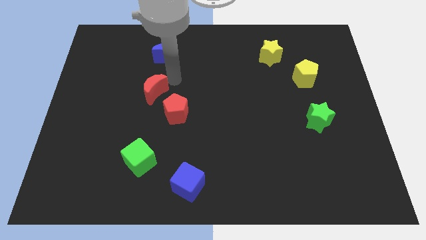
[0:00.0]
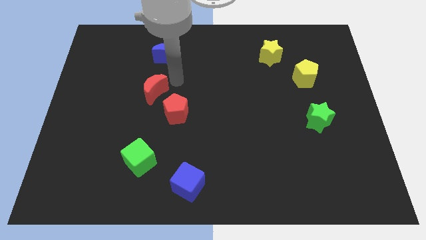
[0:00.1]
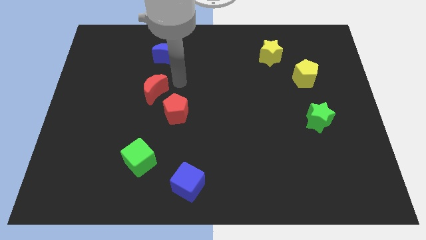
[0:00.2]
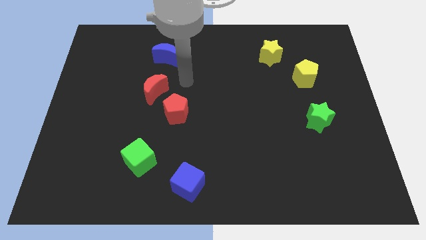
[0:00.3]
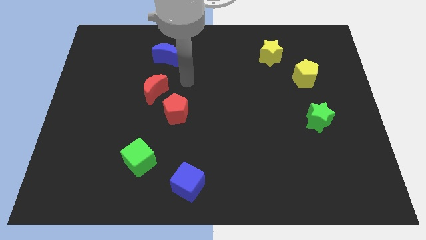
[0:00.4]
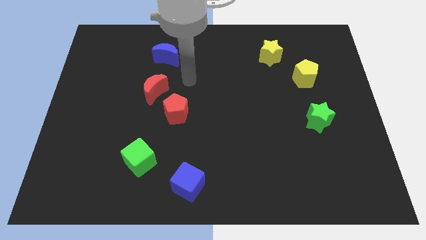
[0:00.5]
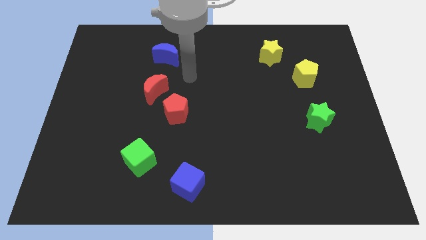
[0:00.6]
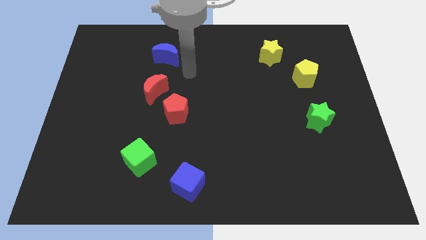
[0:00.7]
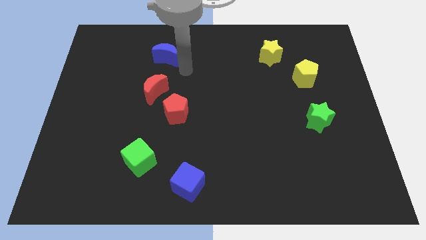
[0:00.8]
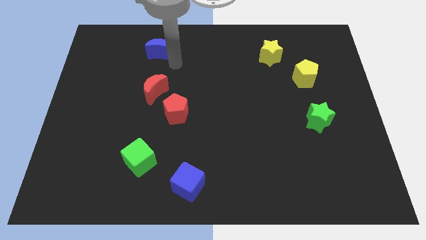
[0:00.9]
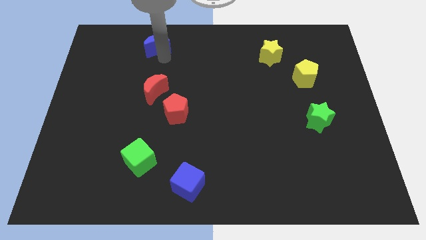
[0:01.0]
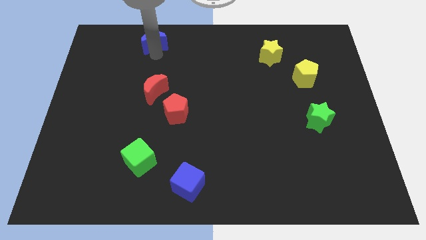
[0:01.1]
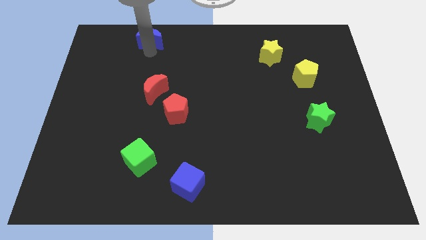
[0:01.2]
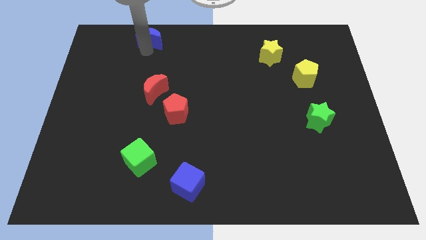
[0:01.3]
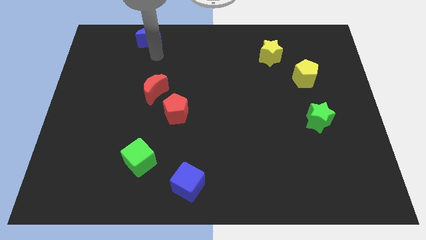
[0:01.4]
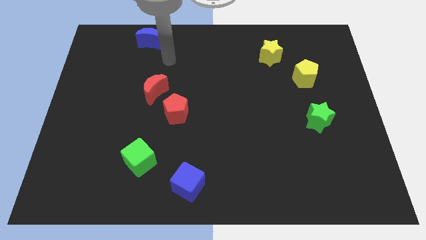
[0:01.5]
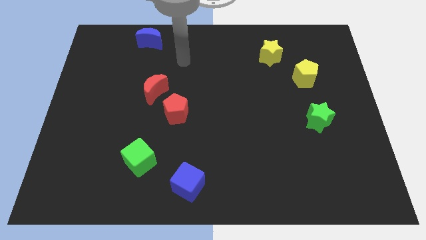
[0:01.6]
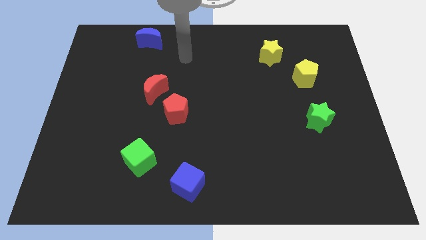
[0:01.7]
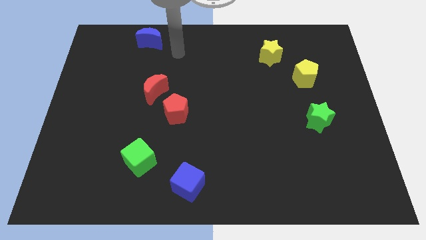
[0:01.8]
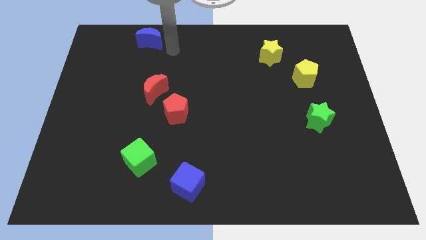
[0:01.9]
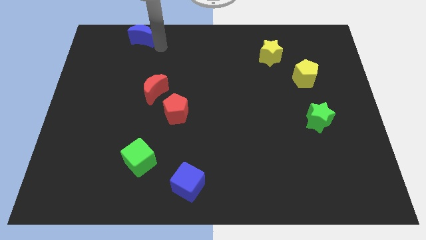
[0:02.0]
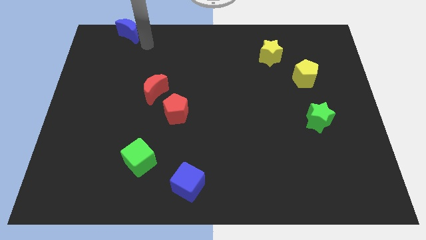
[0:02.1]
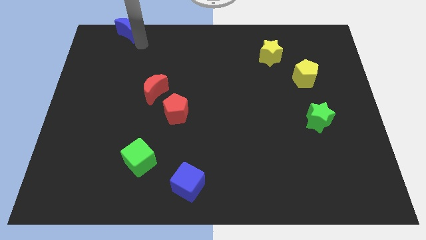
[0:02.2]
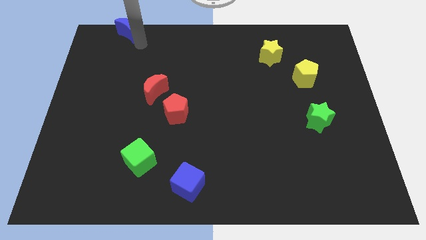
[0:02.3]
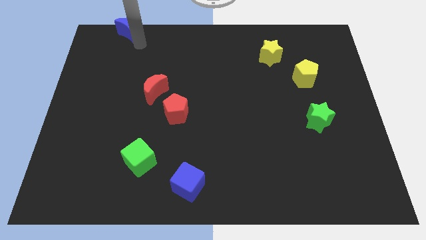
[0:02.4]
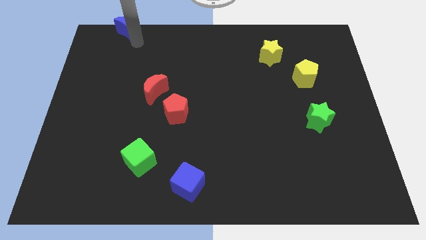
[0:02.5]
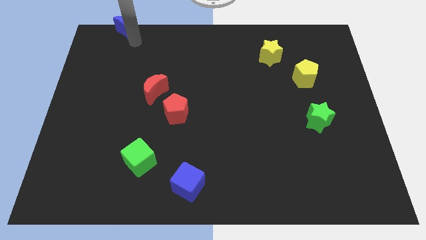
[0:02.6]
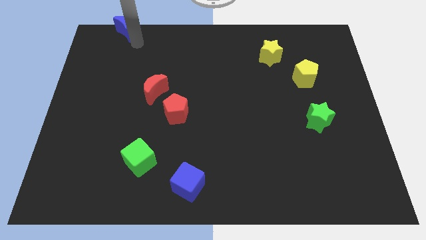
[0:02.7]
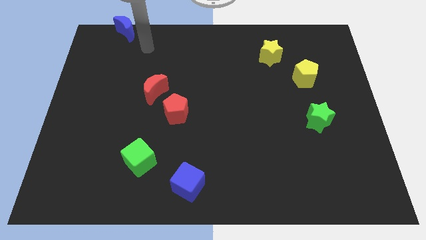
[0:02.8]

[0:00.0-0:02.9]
push blue moon to the top

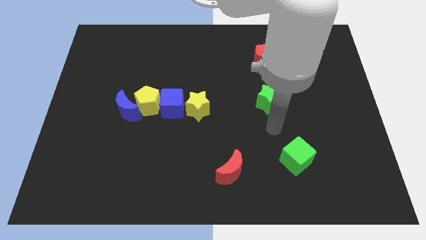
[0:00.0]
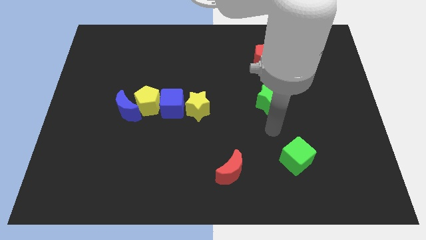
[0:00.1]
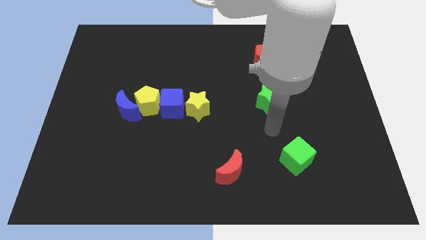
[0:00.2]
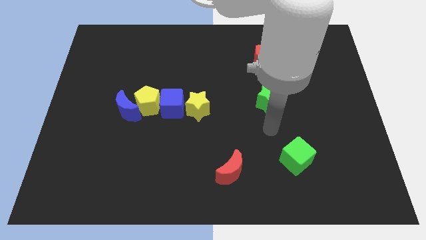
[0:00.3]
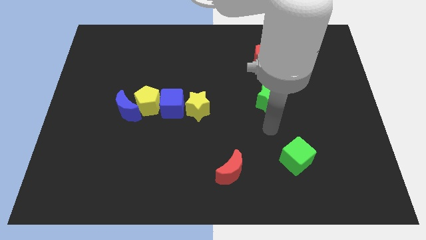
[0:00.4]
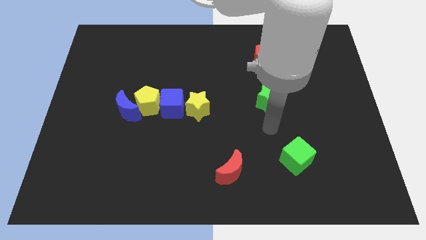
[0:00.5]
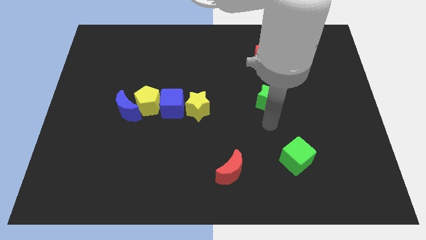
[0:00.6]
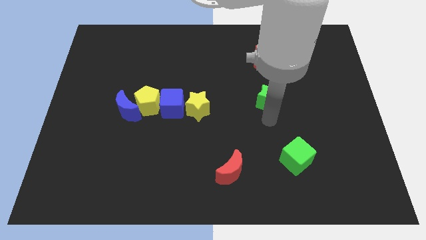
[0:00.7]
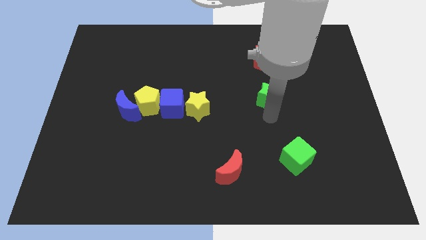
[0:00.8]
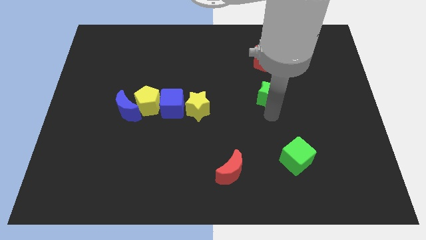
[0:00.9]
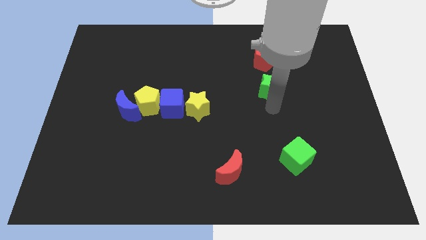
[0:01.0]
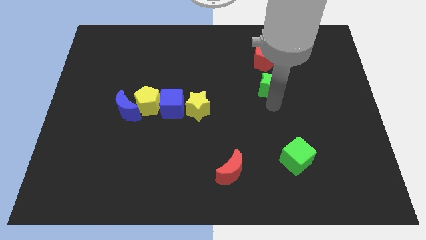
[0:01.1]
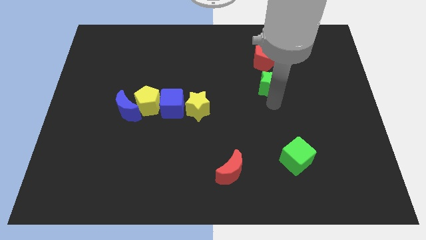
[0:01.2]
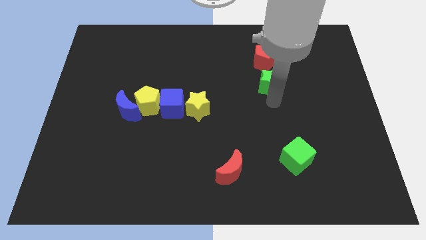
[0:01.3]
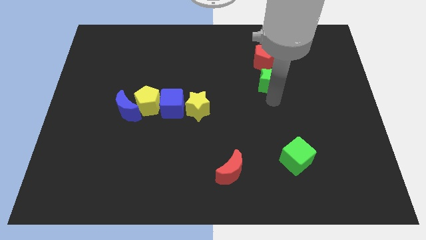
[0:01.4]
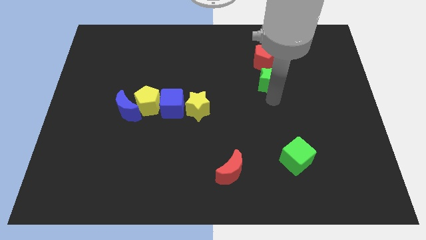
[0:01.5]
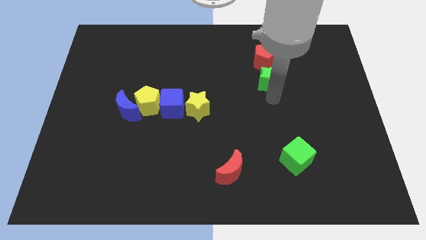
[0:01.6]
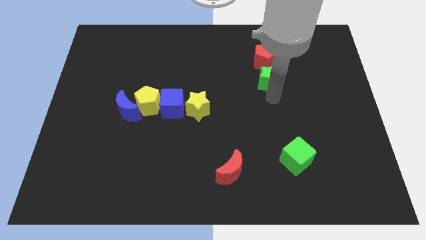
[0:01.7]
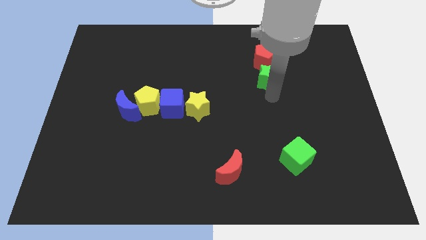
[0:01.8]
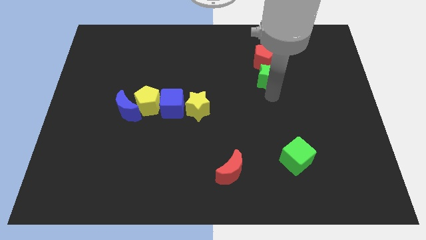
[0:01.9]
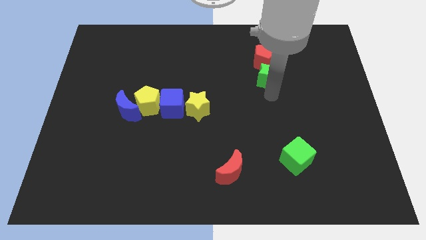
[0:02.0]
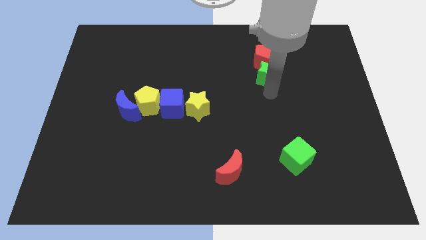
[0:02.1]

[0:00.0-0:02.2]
move the green star towards the red pentagon

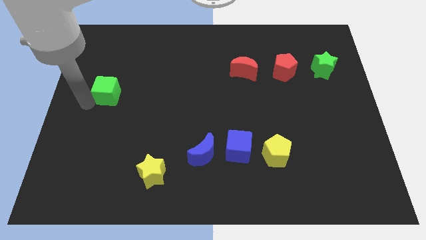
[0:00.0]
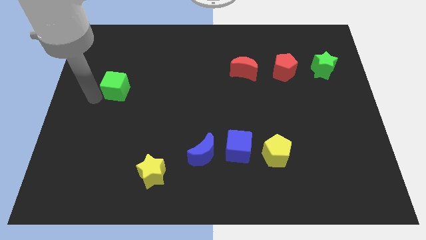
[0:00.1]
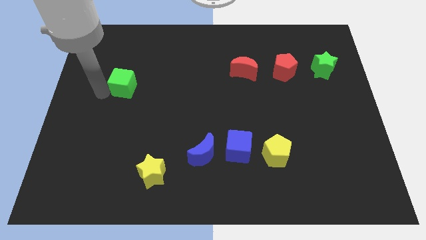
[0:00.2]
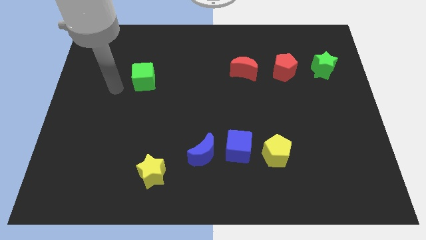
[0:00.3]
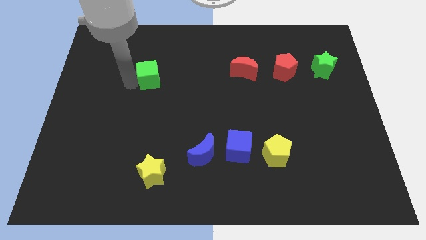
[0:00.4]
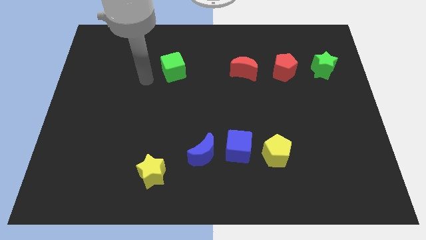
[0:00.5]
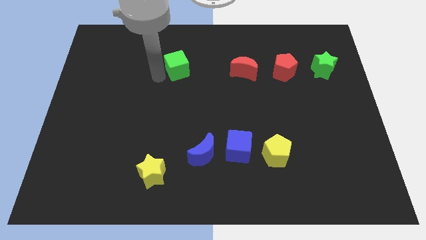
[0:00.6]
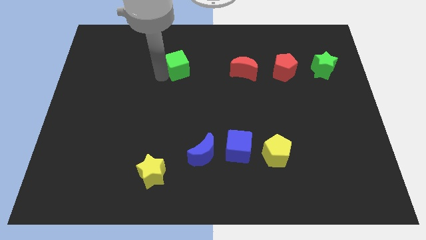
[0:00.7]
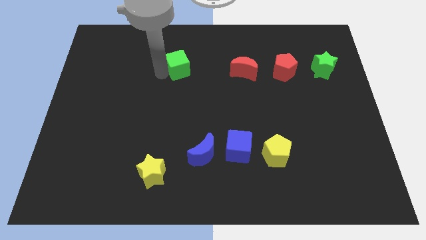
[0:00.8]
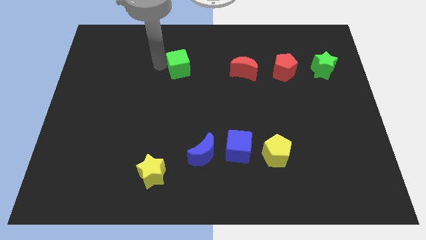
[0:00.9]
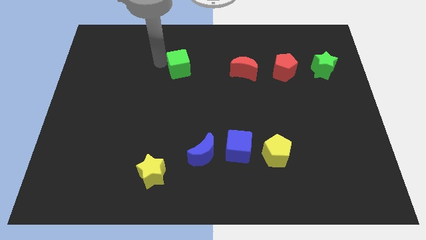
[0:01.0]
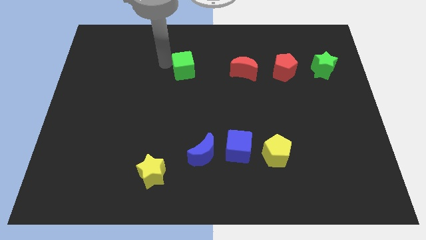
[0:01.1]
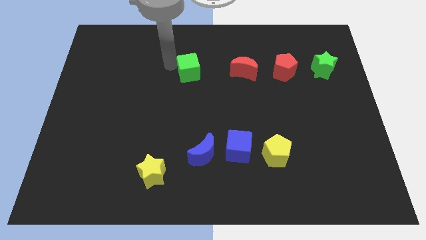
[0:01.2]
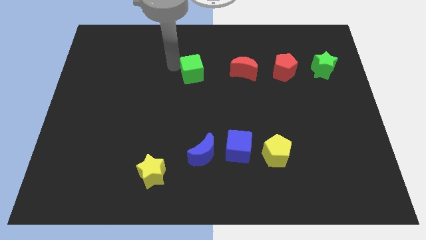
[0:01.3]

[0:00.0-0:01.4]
move the green cube left to the red moon

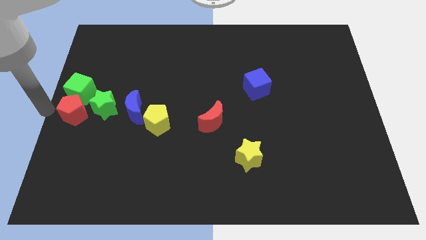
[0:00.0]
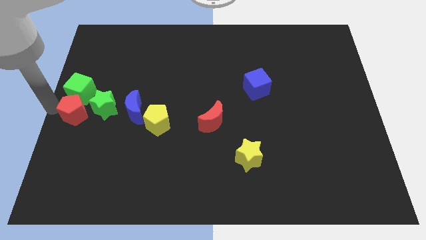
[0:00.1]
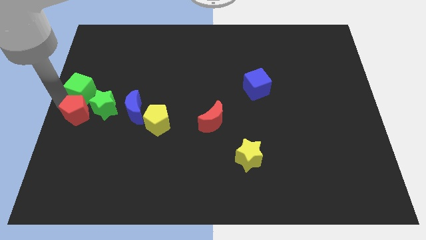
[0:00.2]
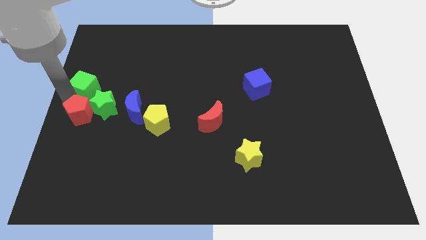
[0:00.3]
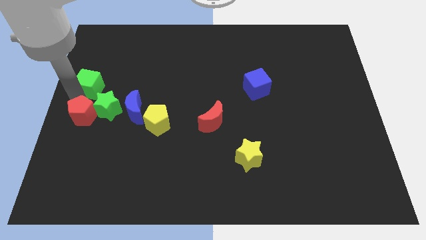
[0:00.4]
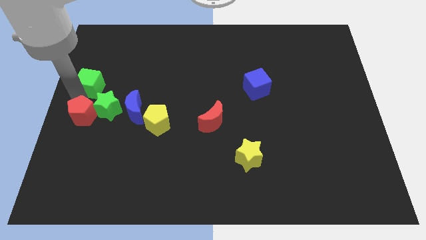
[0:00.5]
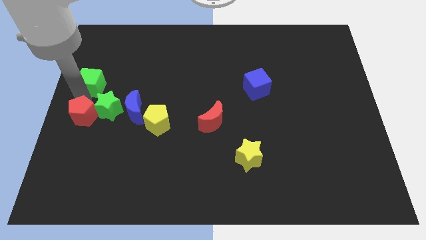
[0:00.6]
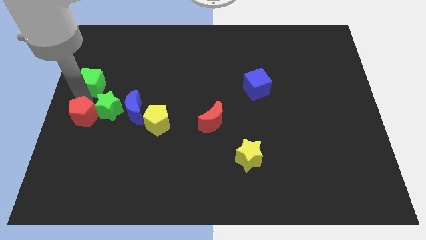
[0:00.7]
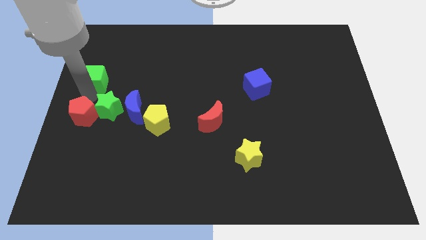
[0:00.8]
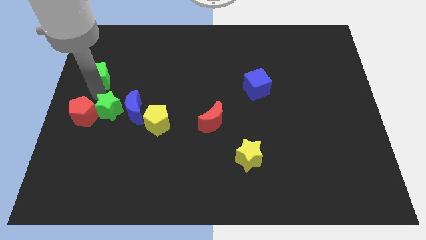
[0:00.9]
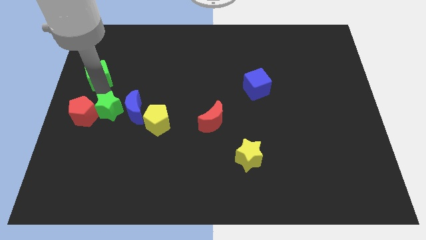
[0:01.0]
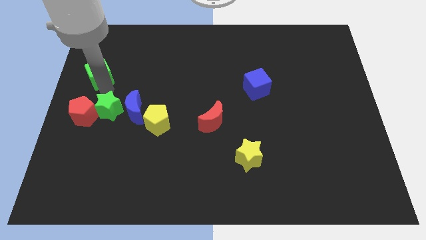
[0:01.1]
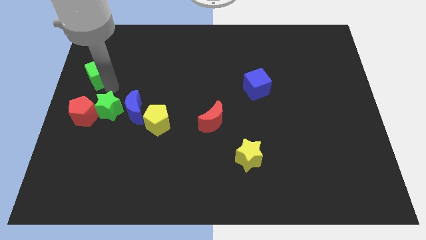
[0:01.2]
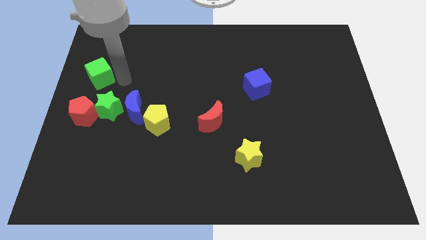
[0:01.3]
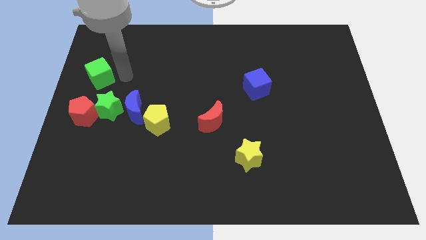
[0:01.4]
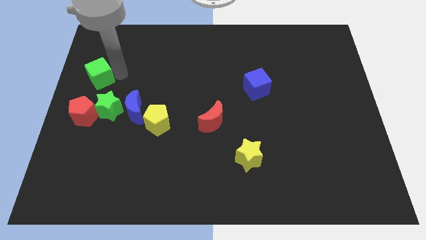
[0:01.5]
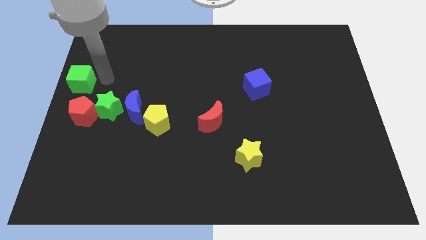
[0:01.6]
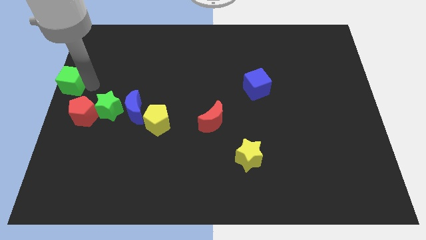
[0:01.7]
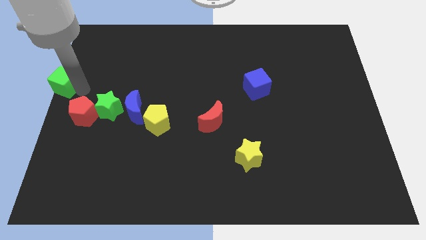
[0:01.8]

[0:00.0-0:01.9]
separate green cube from the red pentagon

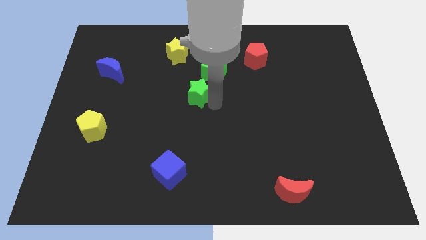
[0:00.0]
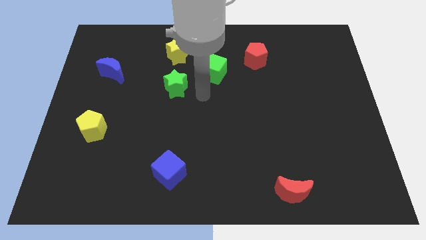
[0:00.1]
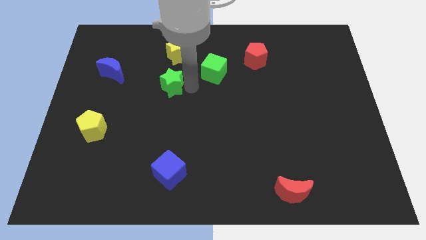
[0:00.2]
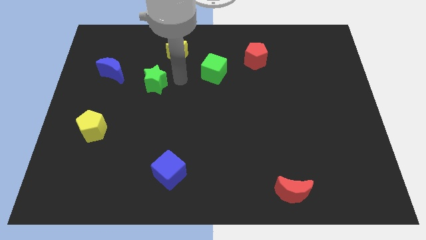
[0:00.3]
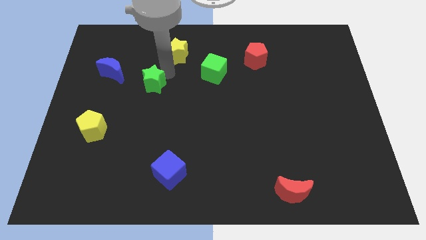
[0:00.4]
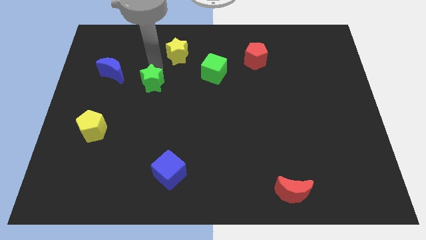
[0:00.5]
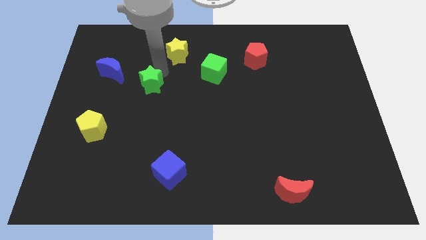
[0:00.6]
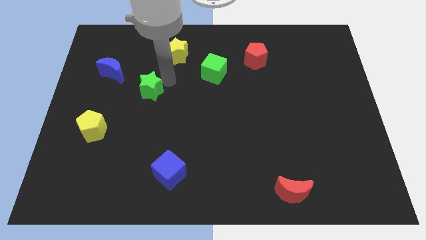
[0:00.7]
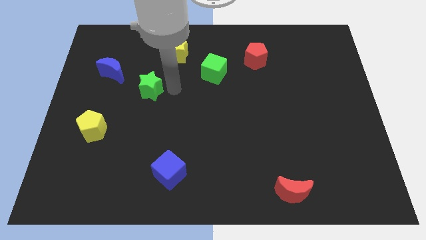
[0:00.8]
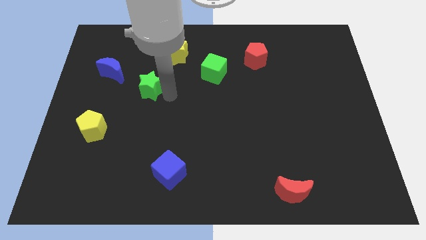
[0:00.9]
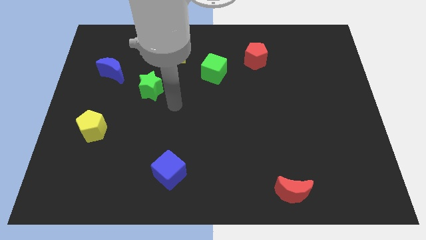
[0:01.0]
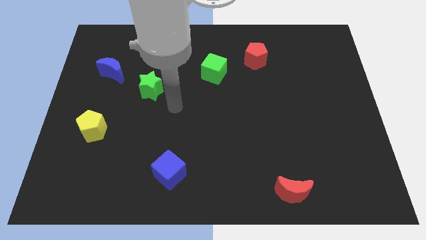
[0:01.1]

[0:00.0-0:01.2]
slide green star towards blue moon
